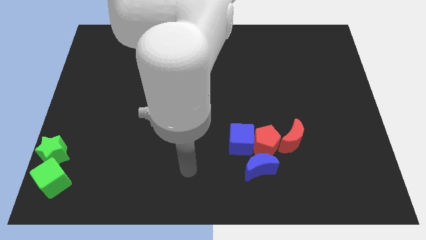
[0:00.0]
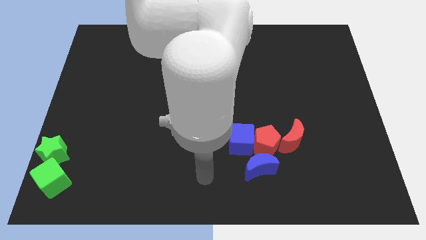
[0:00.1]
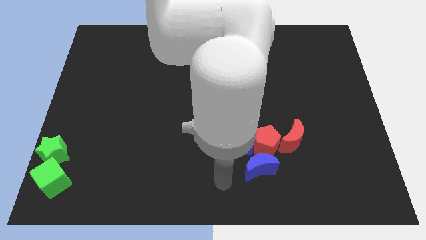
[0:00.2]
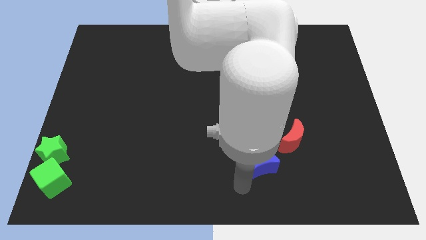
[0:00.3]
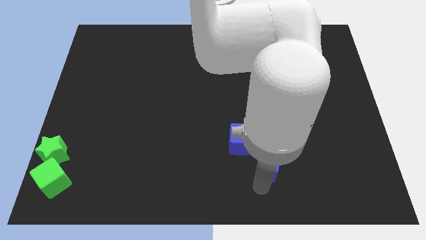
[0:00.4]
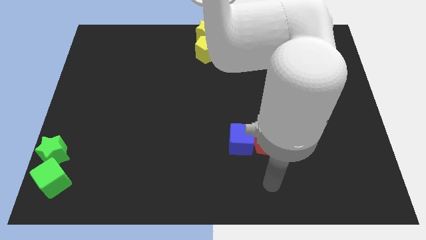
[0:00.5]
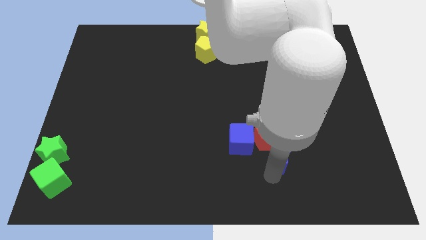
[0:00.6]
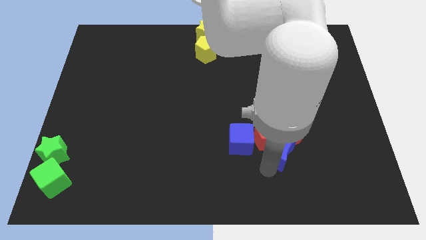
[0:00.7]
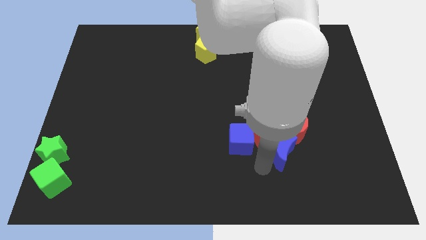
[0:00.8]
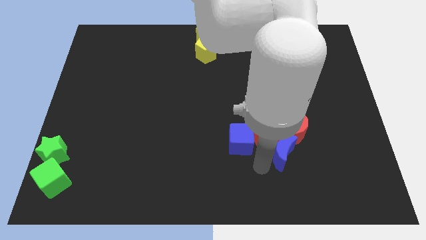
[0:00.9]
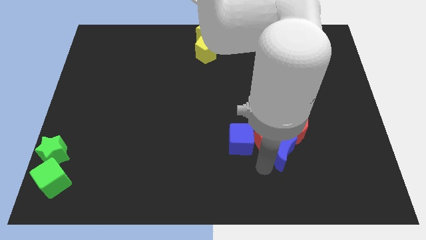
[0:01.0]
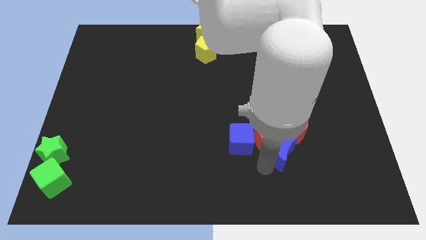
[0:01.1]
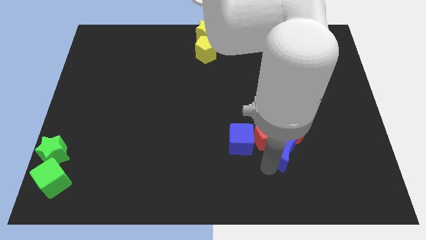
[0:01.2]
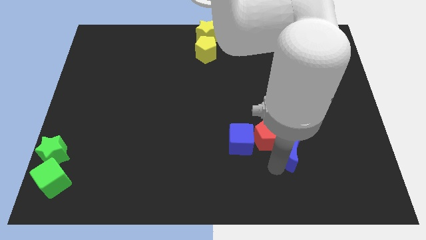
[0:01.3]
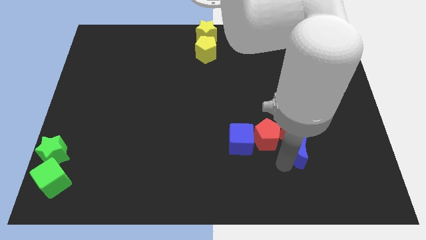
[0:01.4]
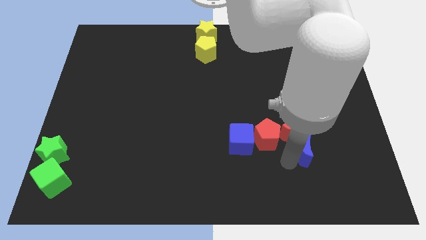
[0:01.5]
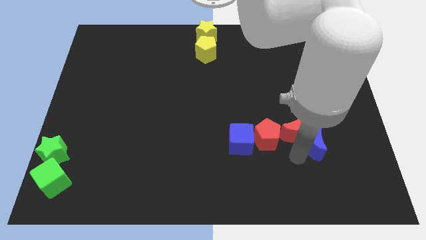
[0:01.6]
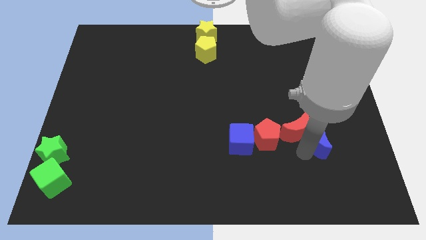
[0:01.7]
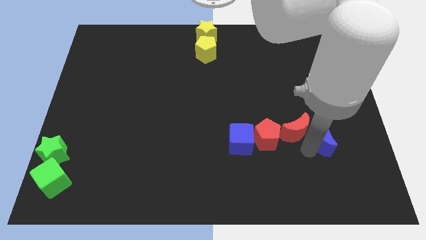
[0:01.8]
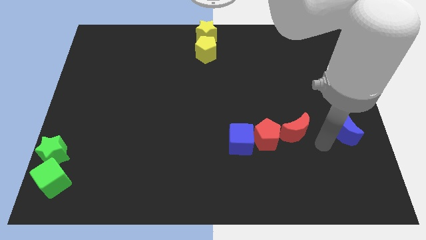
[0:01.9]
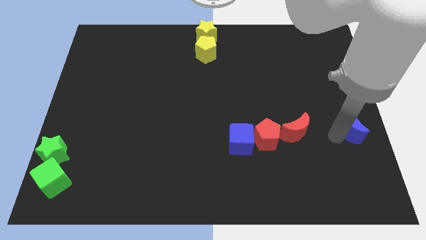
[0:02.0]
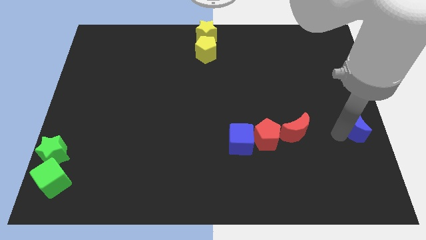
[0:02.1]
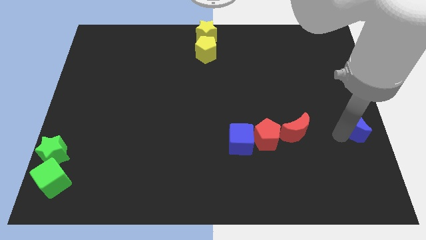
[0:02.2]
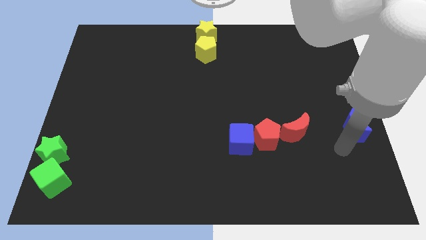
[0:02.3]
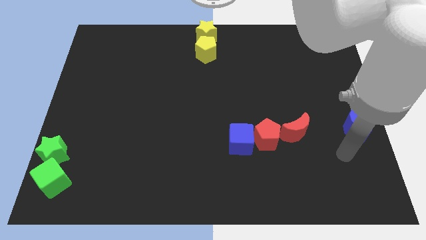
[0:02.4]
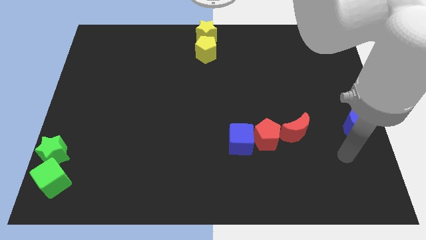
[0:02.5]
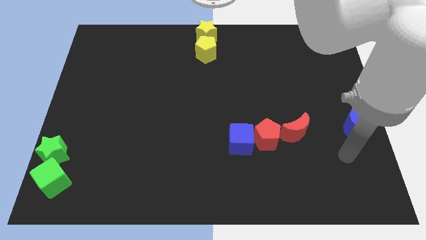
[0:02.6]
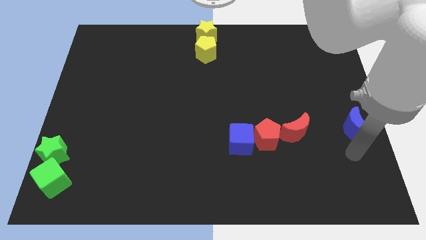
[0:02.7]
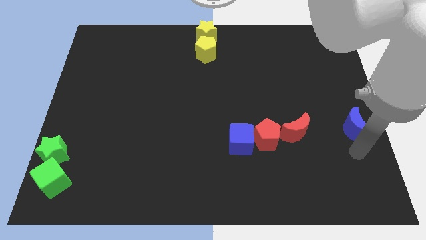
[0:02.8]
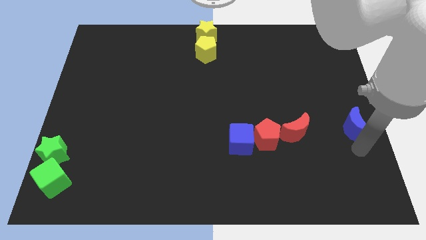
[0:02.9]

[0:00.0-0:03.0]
place the blue moon to the right center

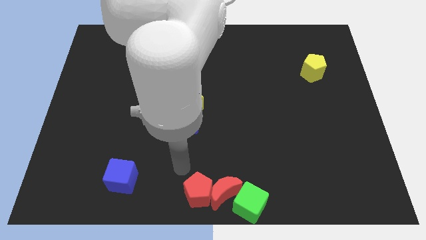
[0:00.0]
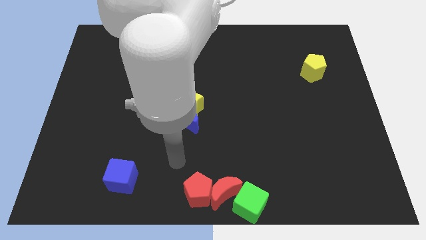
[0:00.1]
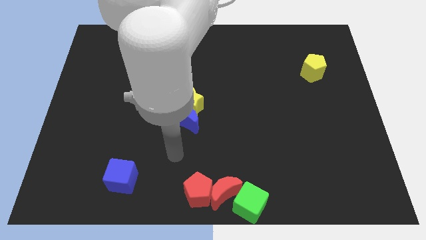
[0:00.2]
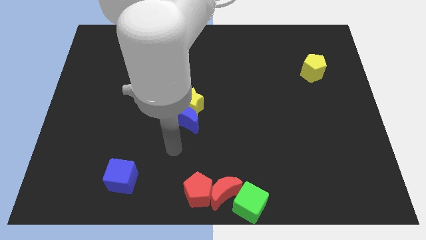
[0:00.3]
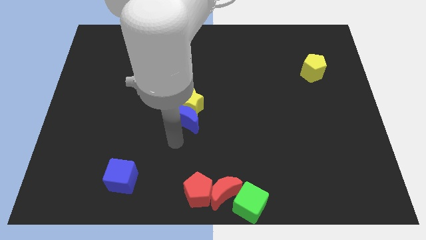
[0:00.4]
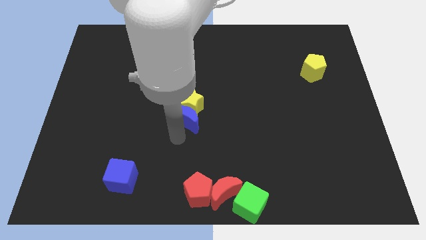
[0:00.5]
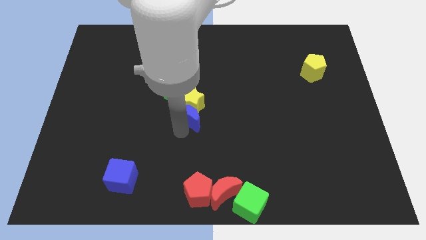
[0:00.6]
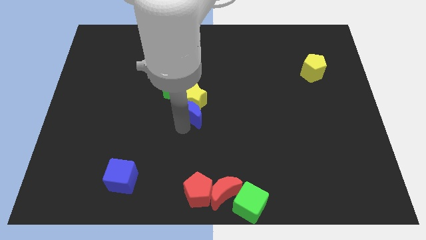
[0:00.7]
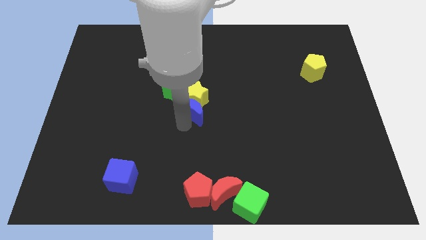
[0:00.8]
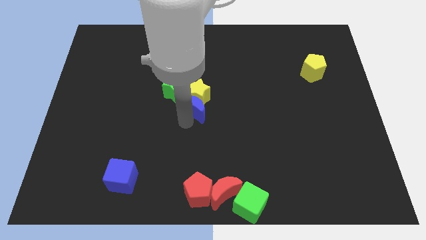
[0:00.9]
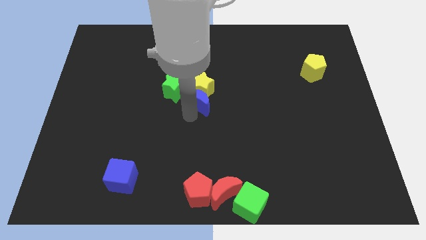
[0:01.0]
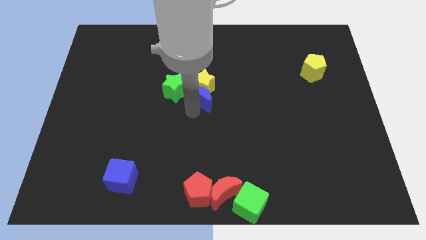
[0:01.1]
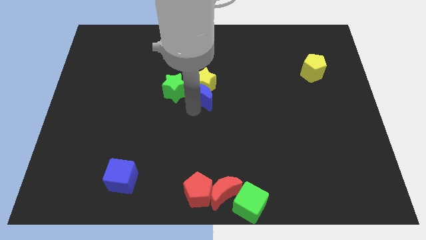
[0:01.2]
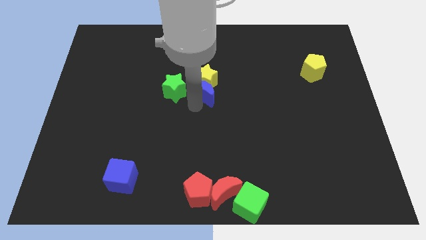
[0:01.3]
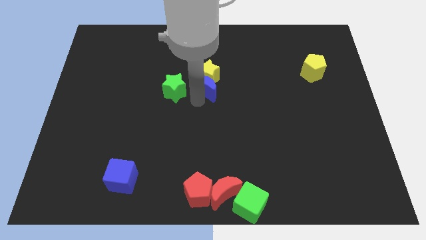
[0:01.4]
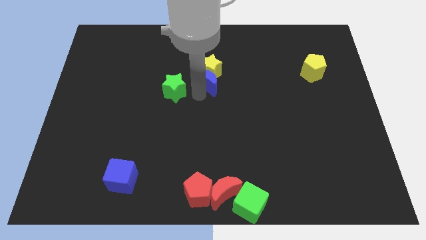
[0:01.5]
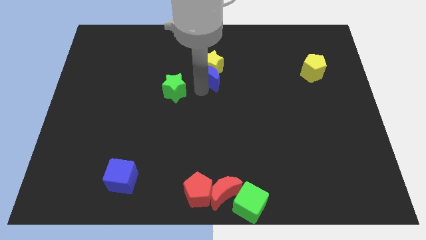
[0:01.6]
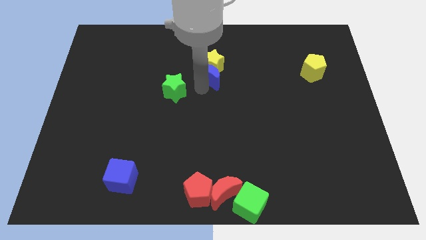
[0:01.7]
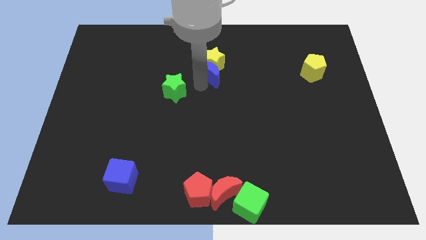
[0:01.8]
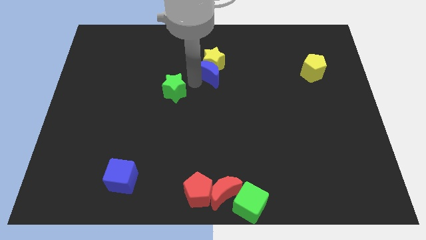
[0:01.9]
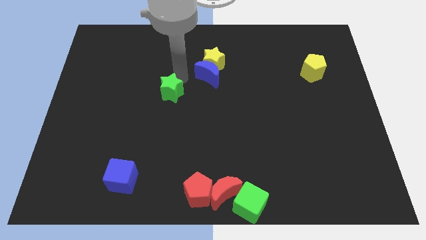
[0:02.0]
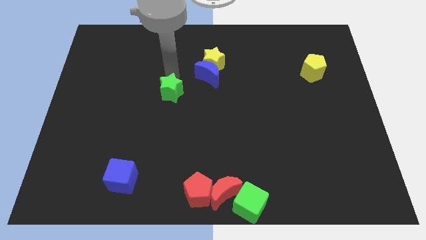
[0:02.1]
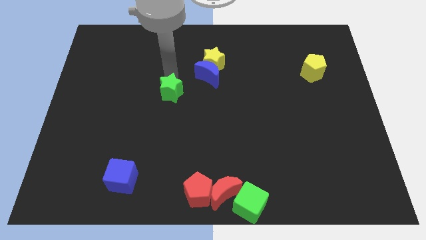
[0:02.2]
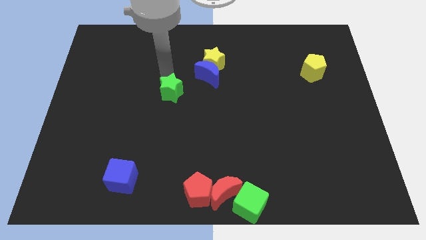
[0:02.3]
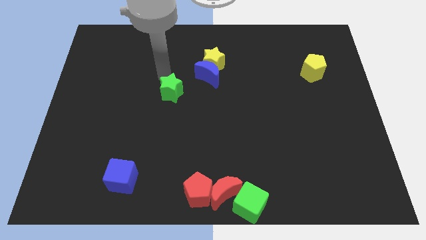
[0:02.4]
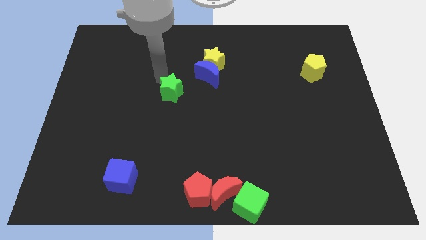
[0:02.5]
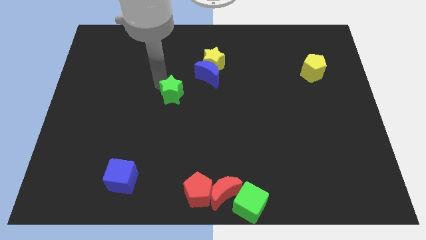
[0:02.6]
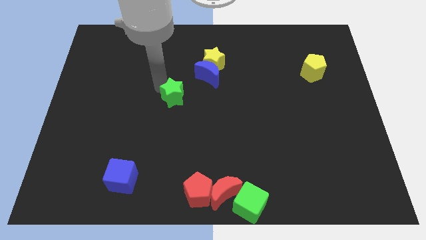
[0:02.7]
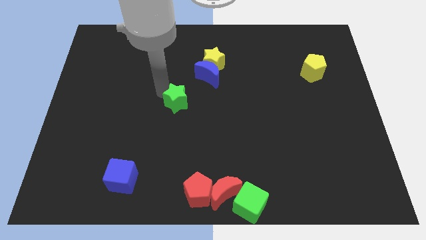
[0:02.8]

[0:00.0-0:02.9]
move the blue crescent along with the yellow star to the top

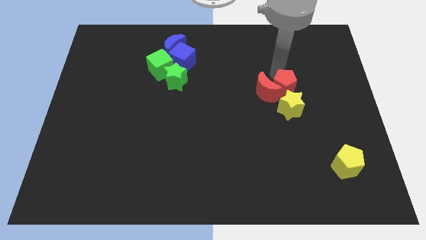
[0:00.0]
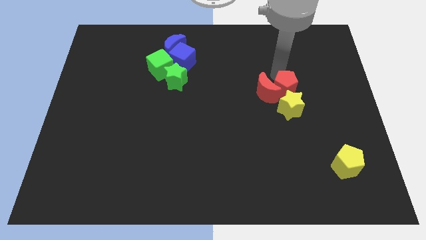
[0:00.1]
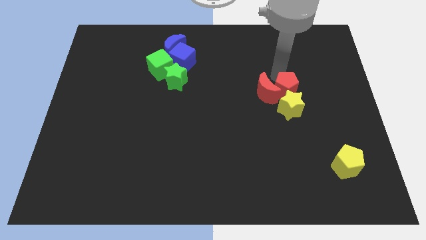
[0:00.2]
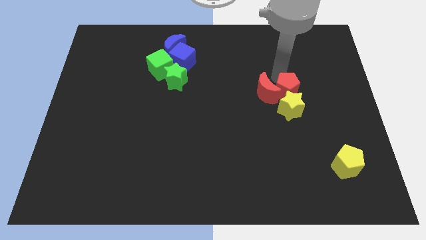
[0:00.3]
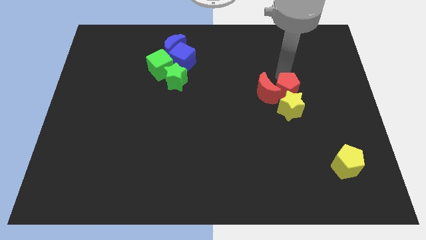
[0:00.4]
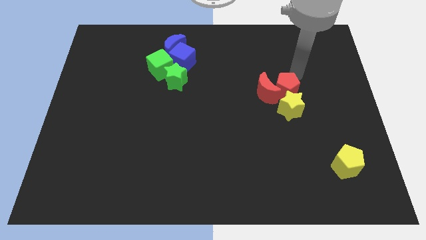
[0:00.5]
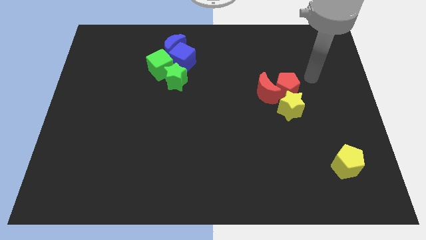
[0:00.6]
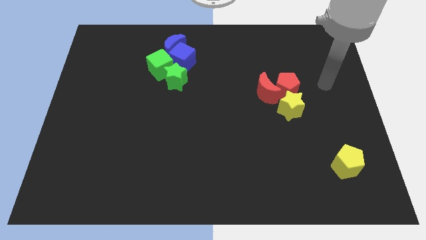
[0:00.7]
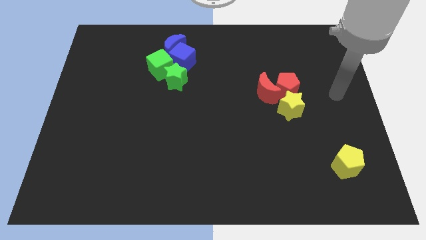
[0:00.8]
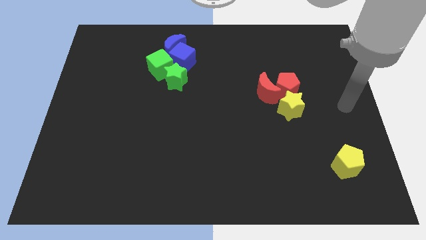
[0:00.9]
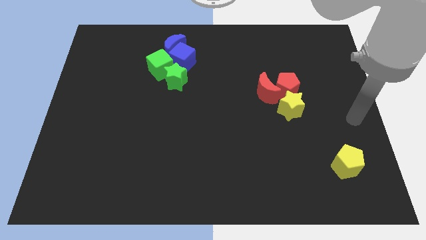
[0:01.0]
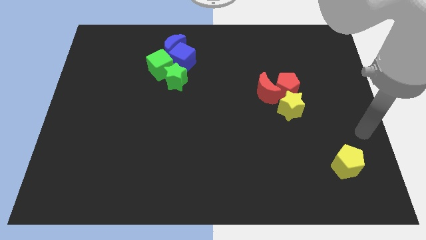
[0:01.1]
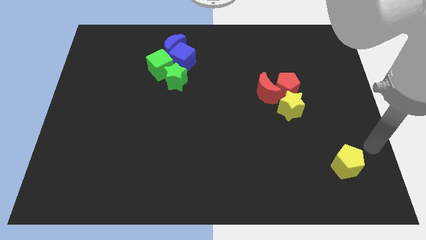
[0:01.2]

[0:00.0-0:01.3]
slightly move the red pentagon towards the yellow star

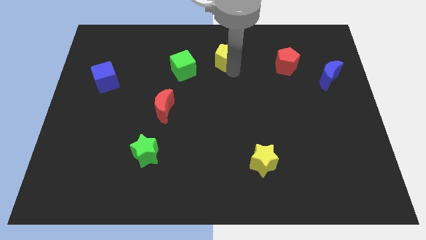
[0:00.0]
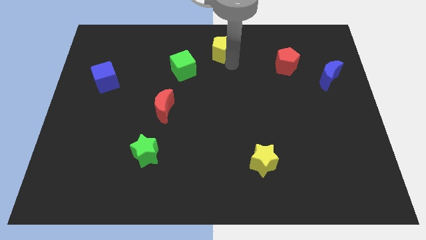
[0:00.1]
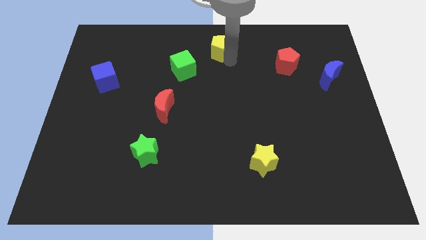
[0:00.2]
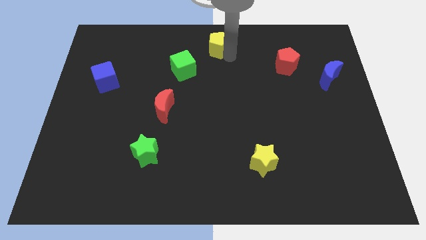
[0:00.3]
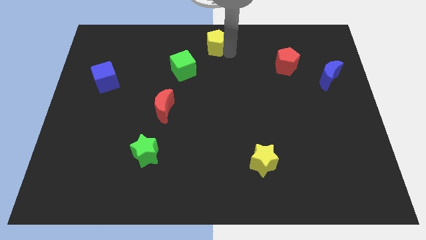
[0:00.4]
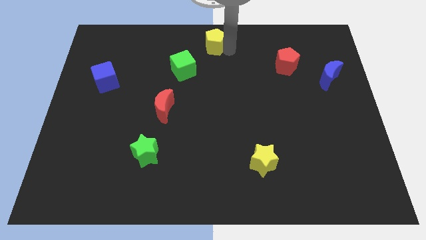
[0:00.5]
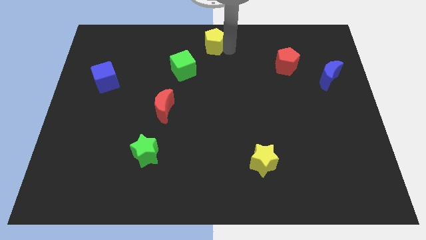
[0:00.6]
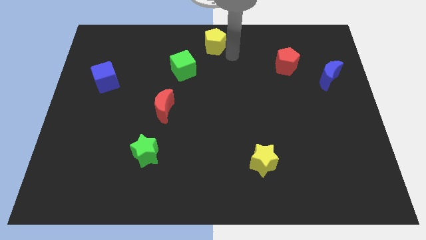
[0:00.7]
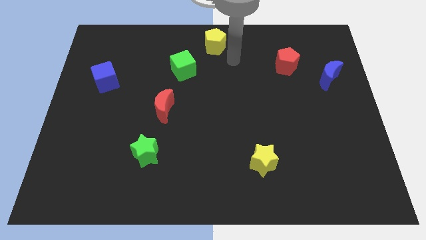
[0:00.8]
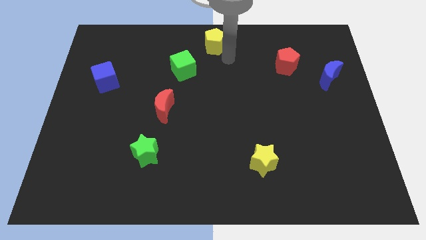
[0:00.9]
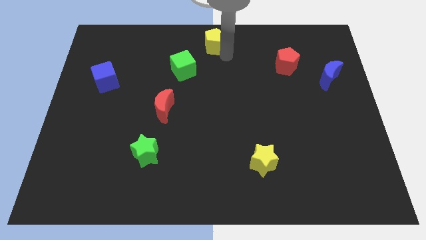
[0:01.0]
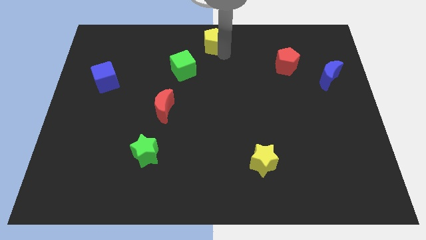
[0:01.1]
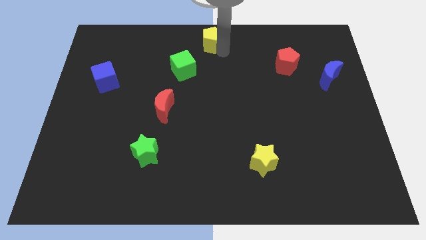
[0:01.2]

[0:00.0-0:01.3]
push the yellow pentagon to the top center of the table

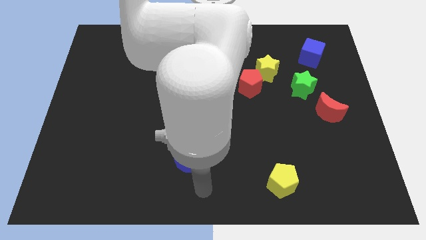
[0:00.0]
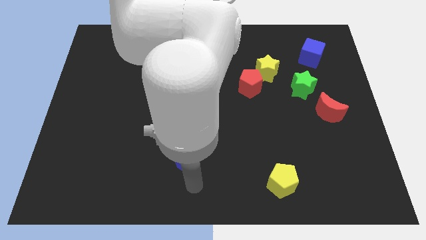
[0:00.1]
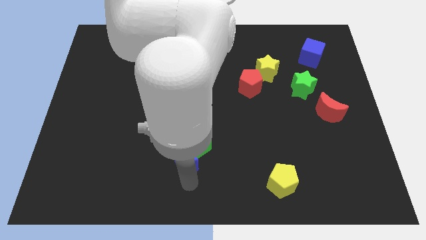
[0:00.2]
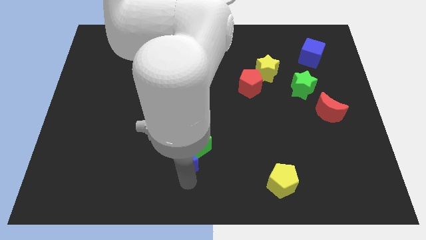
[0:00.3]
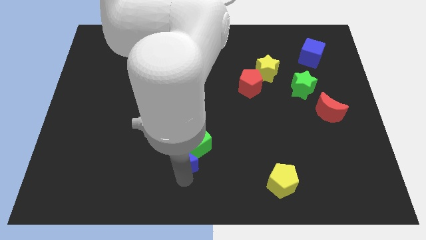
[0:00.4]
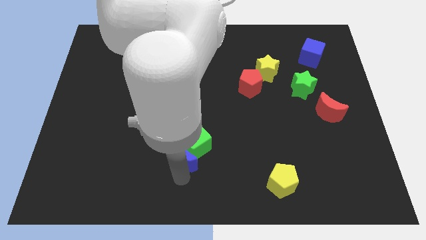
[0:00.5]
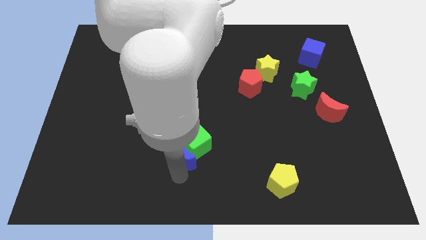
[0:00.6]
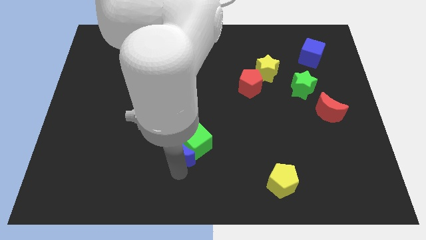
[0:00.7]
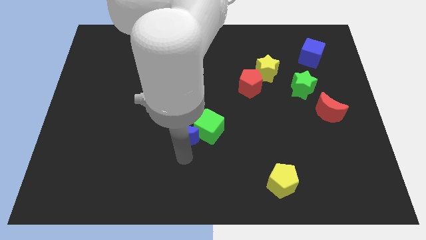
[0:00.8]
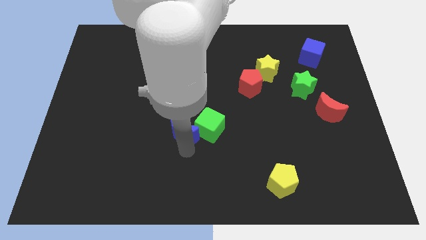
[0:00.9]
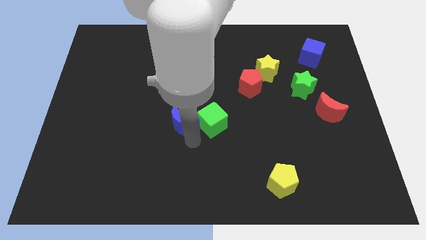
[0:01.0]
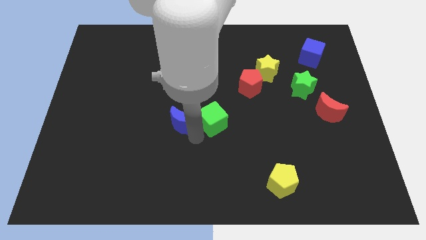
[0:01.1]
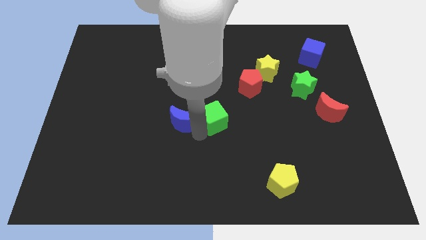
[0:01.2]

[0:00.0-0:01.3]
push blue moon in to green cube
